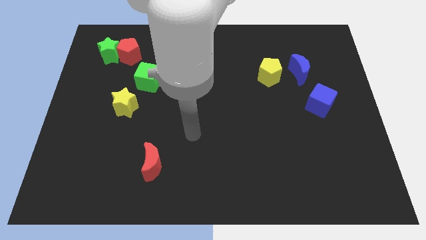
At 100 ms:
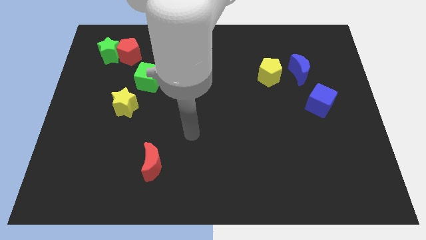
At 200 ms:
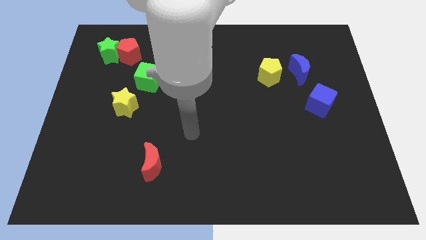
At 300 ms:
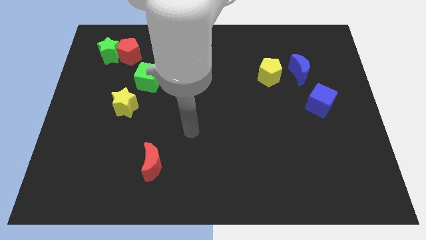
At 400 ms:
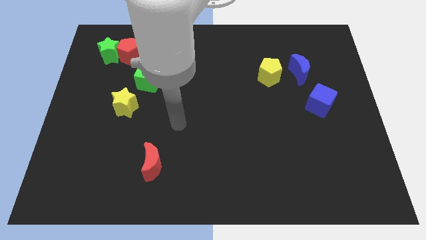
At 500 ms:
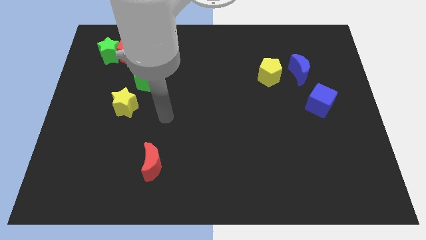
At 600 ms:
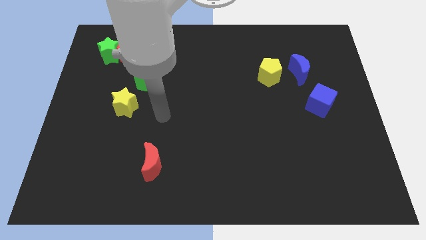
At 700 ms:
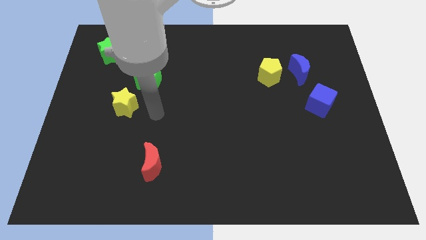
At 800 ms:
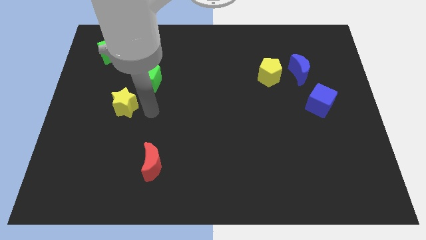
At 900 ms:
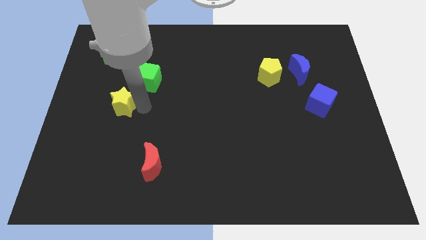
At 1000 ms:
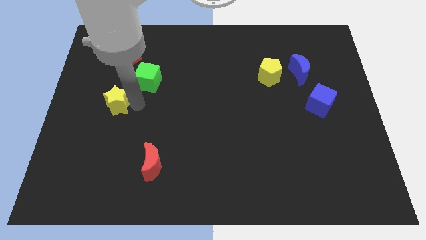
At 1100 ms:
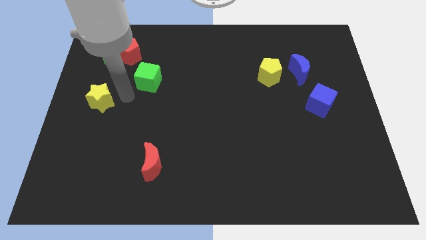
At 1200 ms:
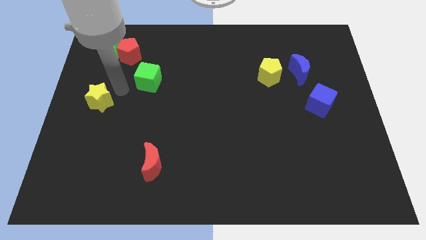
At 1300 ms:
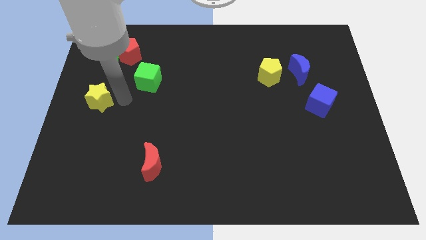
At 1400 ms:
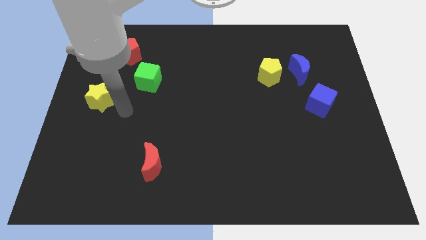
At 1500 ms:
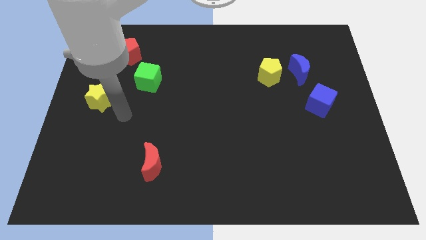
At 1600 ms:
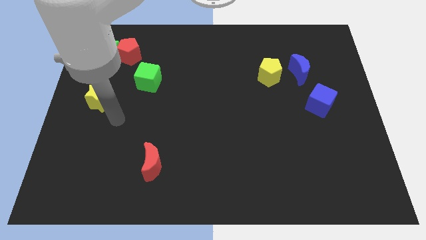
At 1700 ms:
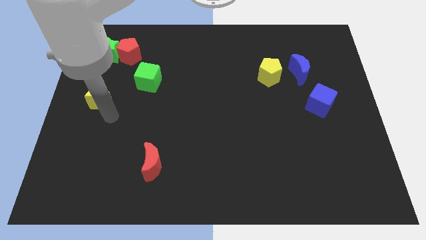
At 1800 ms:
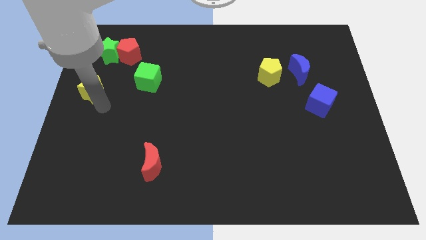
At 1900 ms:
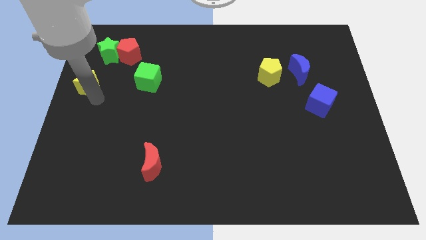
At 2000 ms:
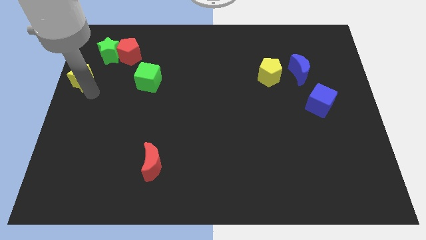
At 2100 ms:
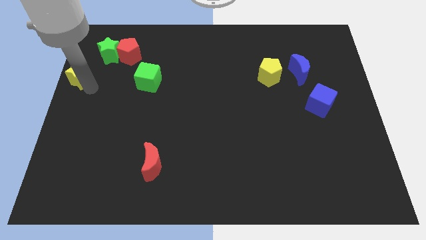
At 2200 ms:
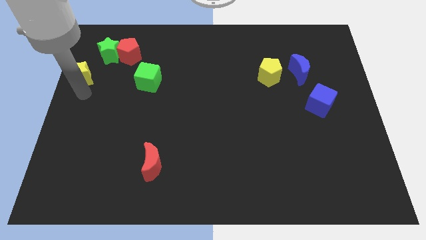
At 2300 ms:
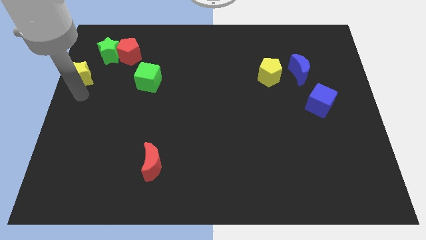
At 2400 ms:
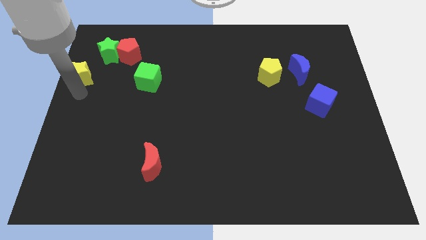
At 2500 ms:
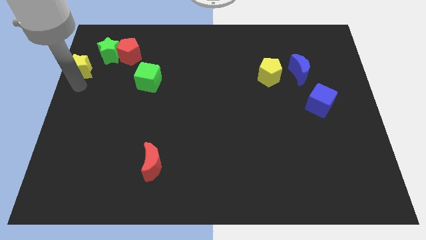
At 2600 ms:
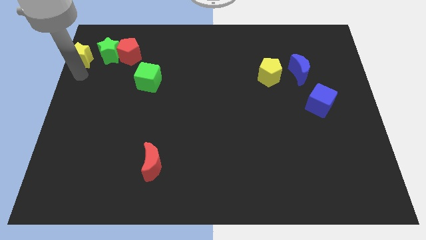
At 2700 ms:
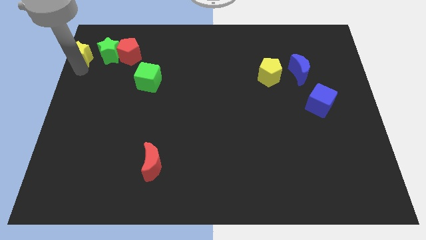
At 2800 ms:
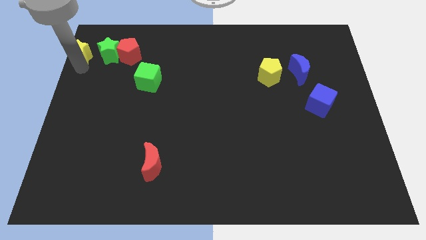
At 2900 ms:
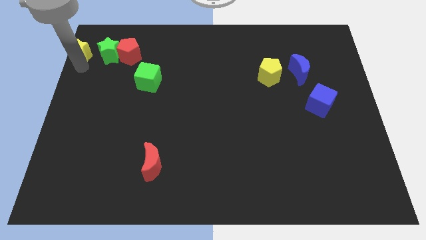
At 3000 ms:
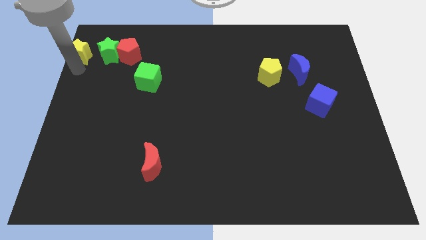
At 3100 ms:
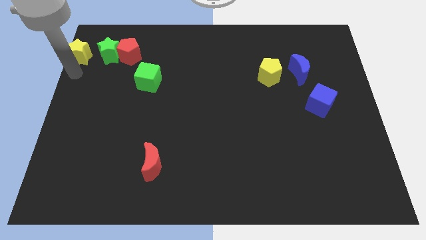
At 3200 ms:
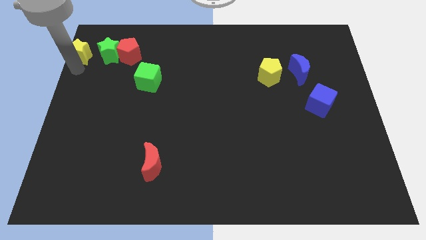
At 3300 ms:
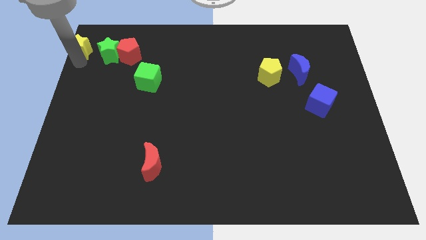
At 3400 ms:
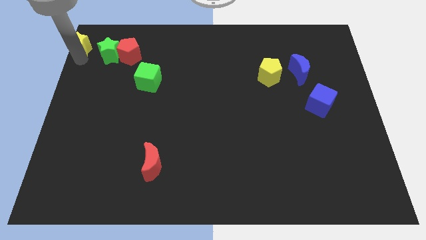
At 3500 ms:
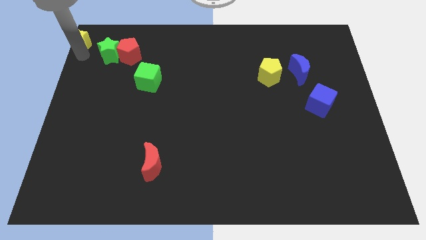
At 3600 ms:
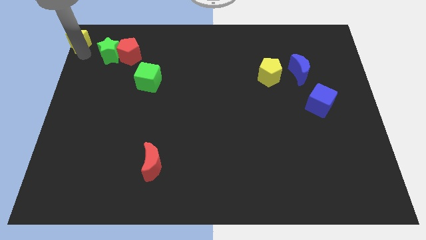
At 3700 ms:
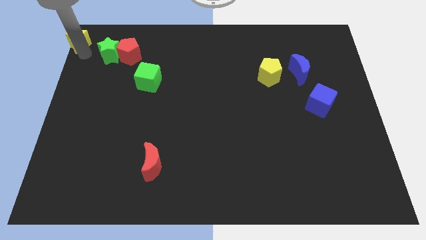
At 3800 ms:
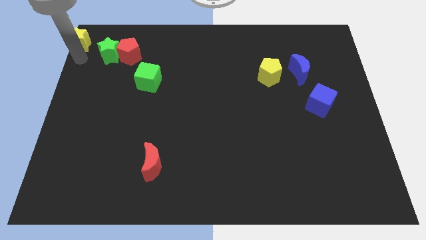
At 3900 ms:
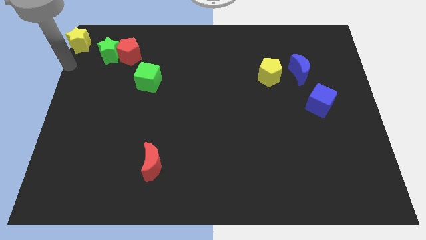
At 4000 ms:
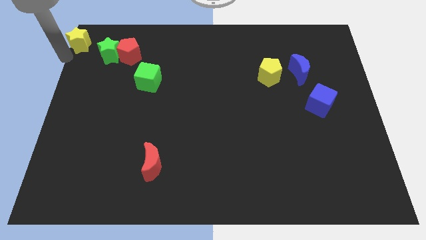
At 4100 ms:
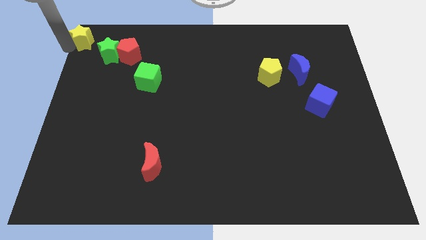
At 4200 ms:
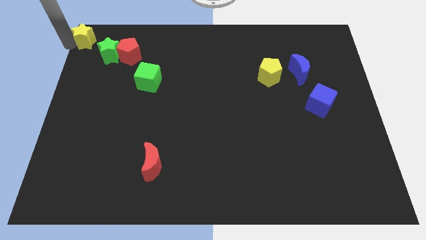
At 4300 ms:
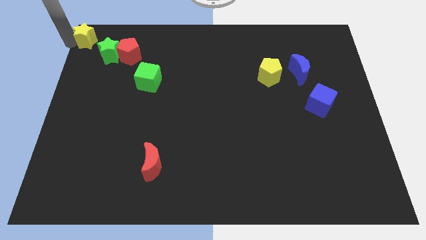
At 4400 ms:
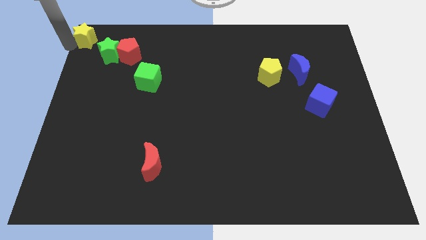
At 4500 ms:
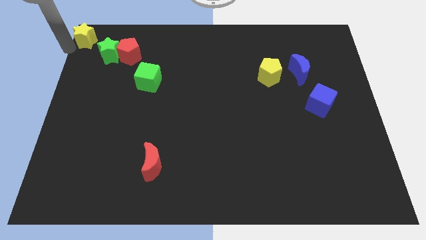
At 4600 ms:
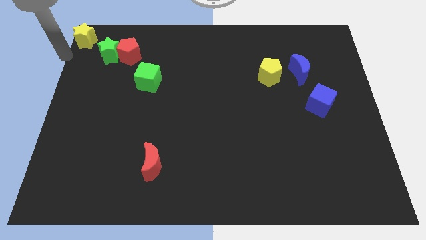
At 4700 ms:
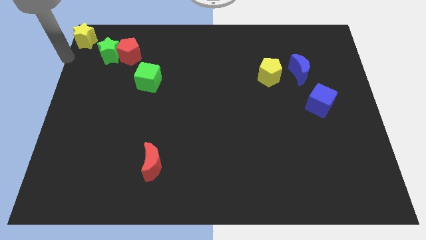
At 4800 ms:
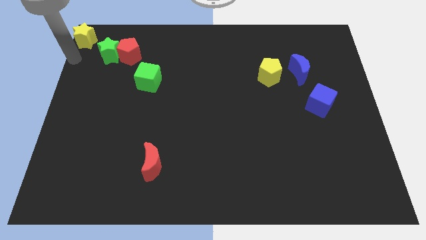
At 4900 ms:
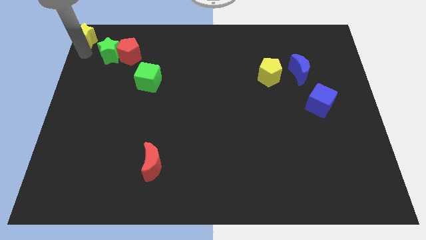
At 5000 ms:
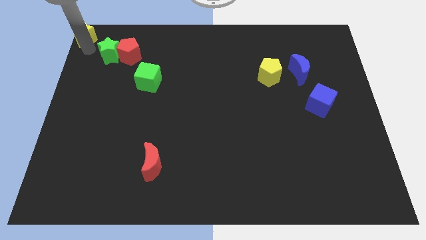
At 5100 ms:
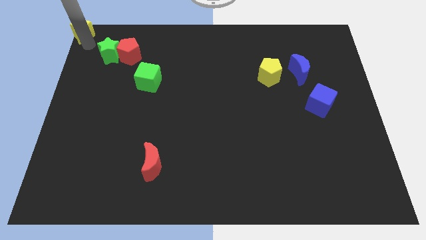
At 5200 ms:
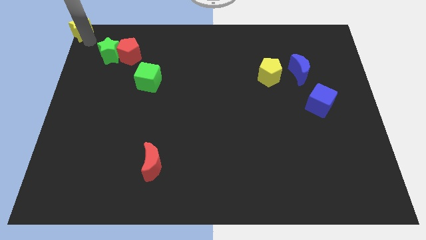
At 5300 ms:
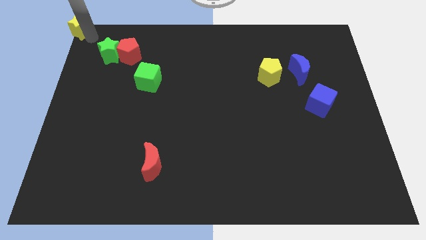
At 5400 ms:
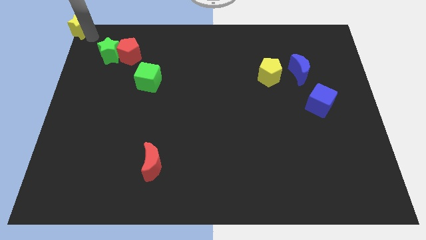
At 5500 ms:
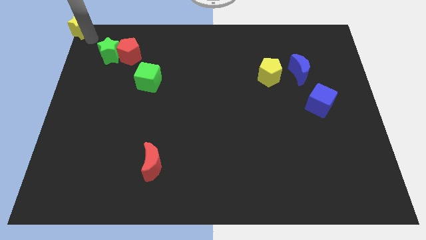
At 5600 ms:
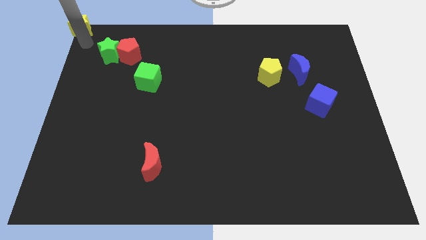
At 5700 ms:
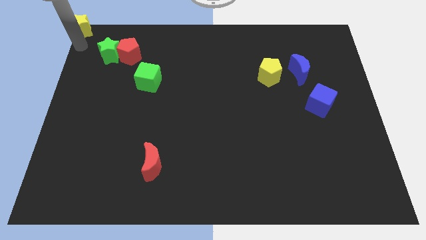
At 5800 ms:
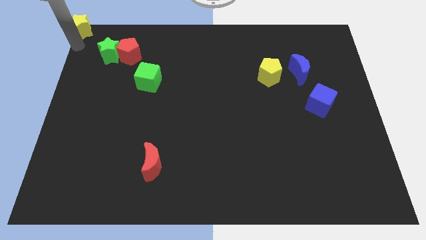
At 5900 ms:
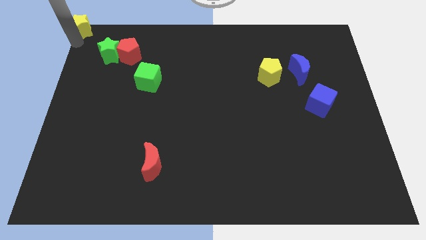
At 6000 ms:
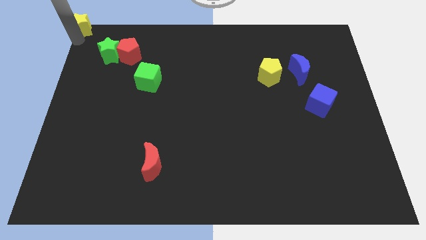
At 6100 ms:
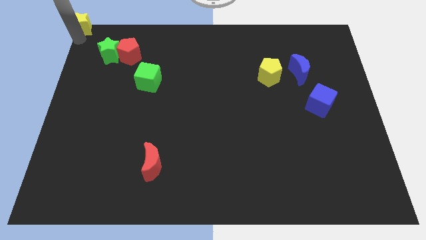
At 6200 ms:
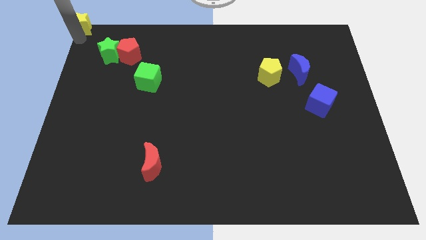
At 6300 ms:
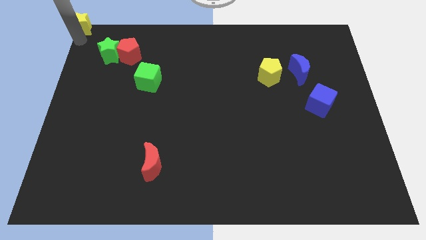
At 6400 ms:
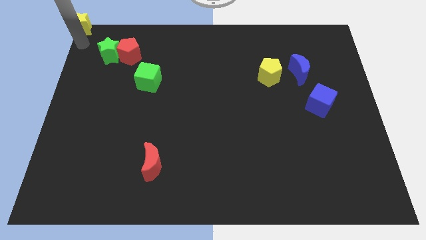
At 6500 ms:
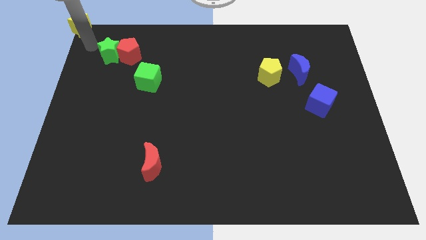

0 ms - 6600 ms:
move the yellow star to the top left corner

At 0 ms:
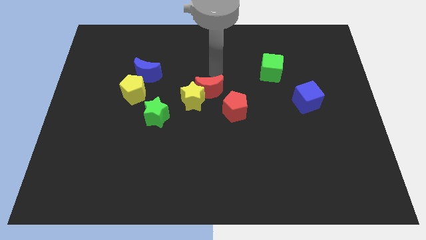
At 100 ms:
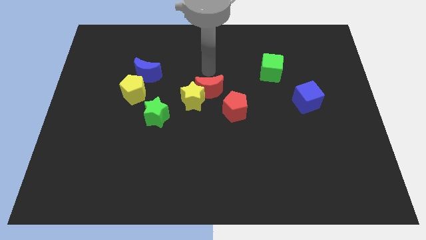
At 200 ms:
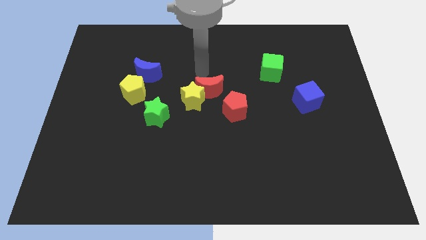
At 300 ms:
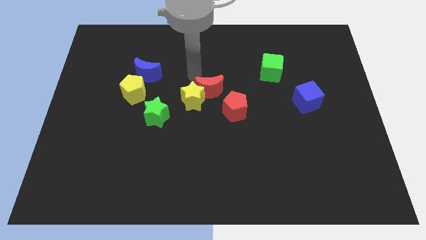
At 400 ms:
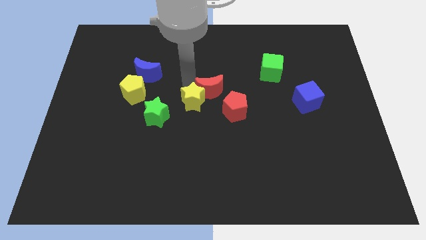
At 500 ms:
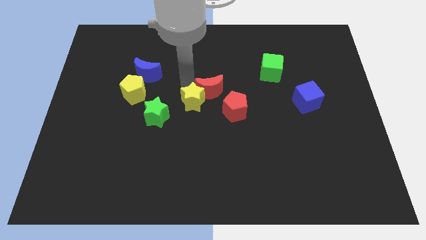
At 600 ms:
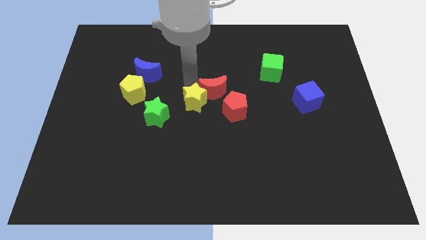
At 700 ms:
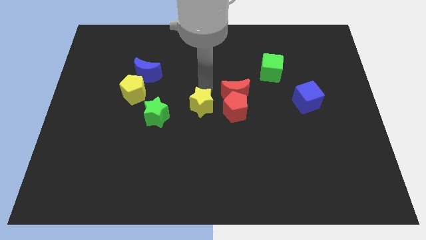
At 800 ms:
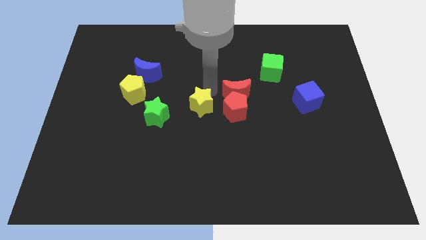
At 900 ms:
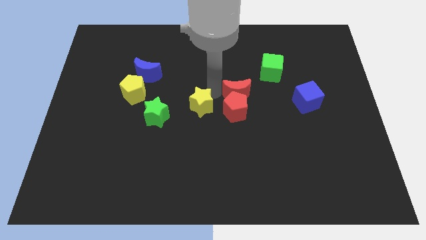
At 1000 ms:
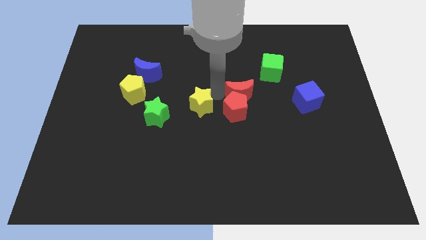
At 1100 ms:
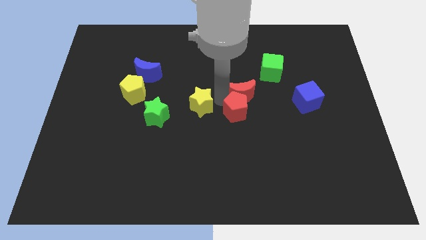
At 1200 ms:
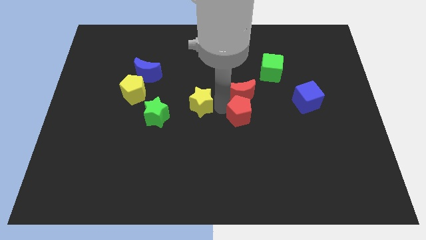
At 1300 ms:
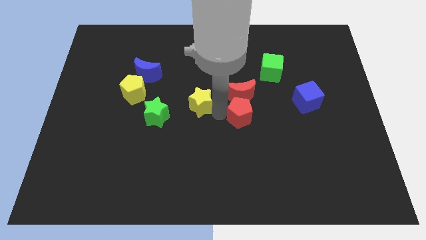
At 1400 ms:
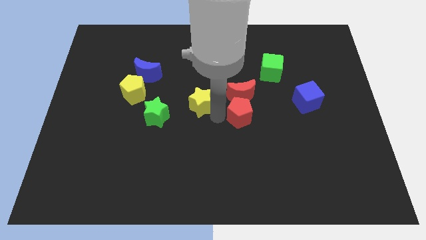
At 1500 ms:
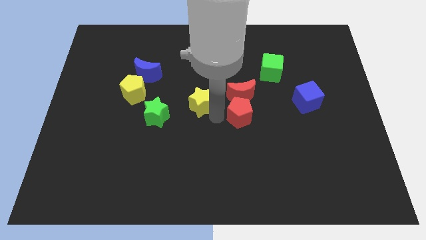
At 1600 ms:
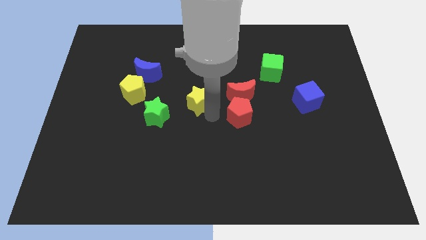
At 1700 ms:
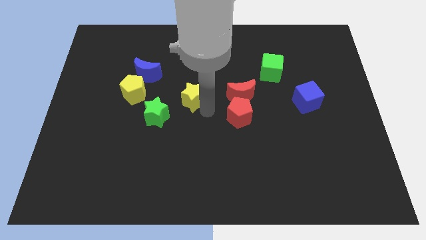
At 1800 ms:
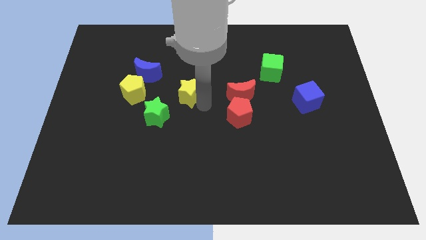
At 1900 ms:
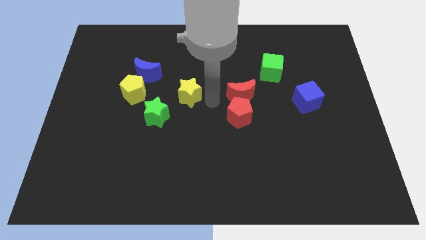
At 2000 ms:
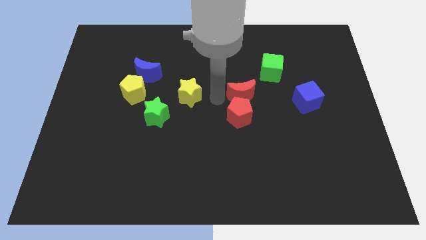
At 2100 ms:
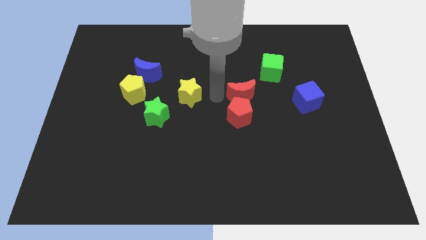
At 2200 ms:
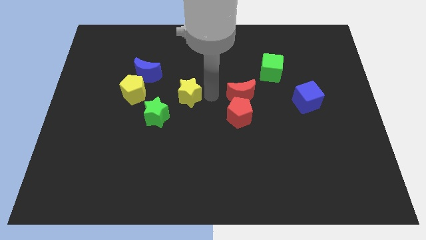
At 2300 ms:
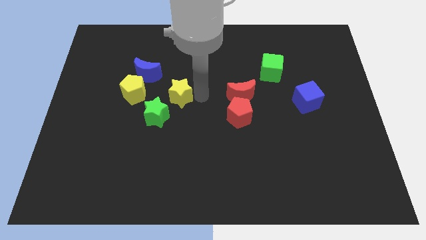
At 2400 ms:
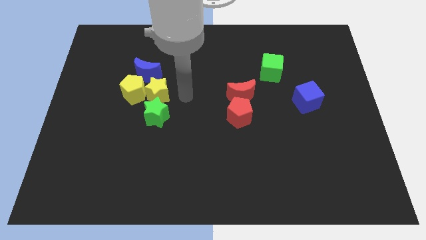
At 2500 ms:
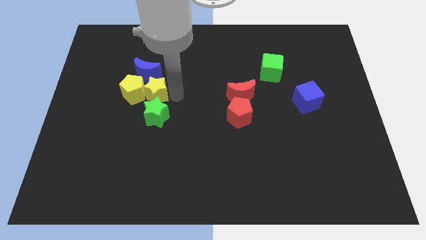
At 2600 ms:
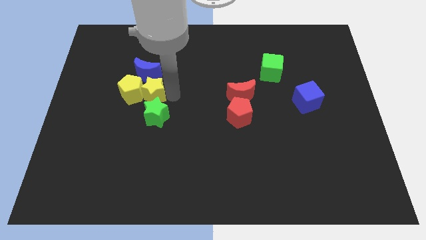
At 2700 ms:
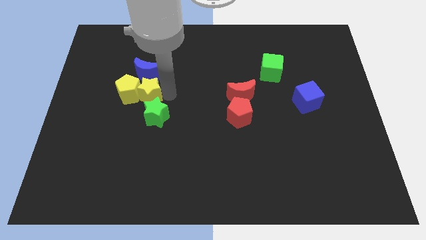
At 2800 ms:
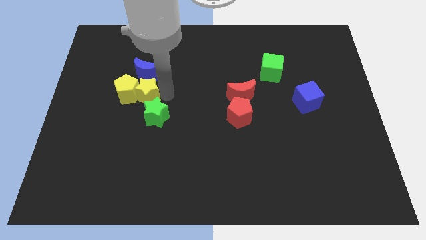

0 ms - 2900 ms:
push the yellow star into the yellow pentagon
